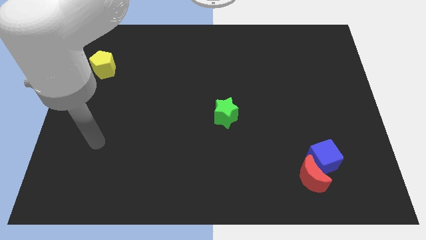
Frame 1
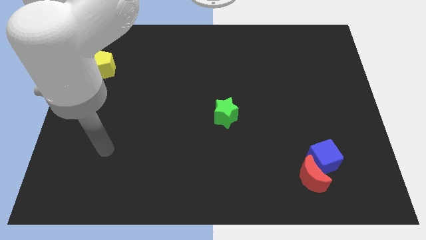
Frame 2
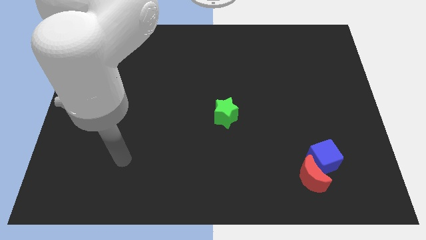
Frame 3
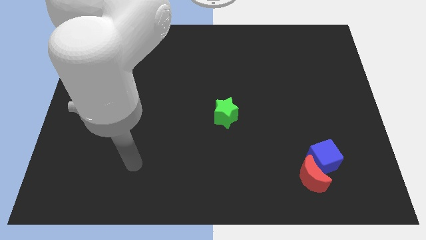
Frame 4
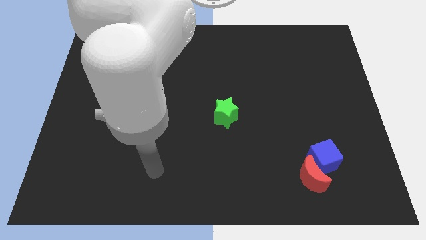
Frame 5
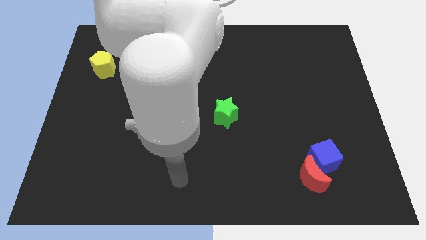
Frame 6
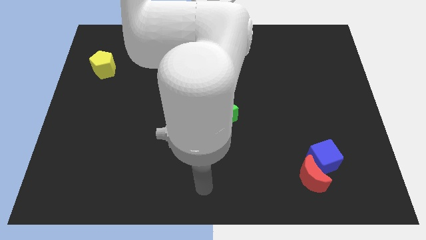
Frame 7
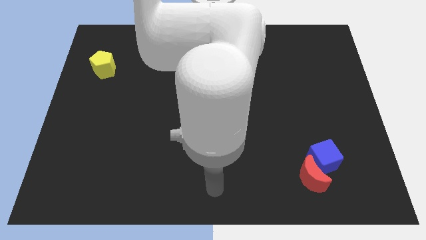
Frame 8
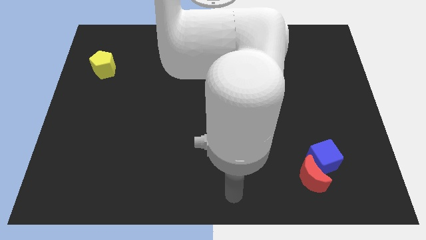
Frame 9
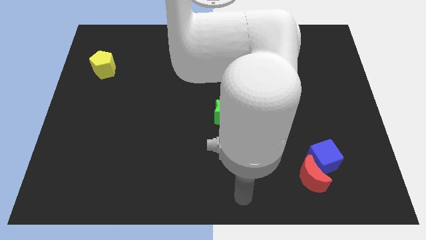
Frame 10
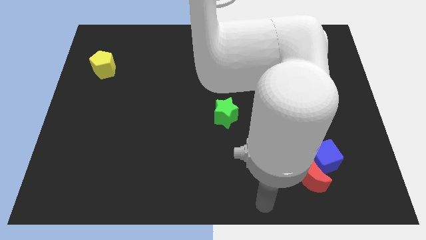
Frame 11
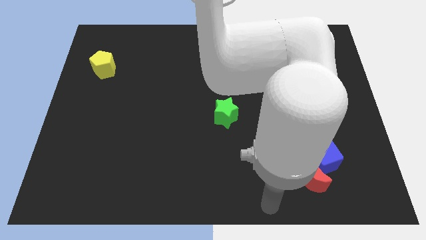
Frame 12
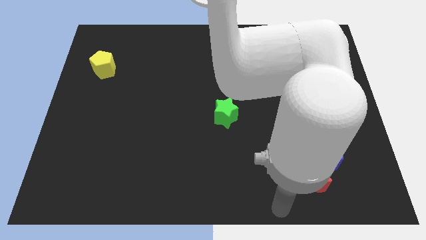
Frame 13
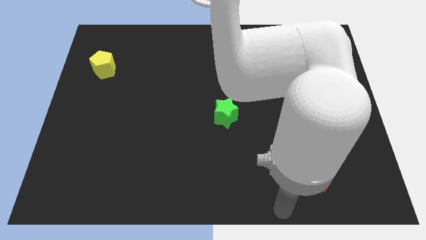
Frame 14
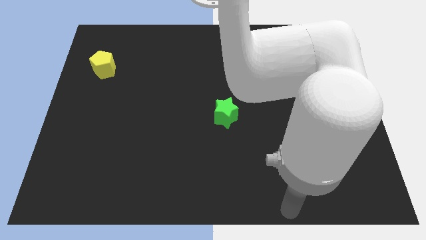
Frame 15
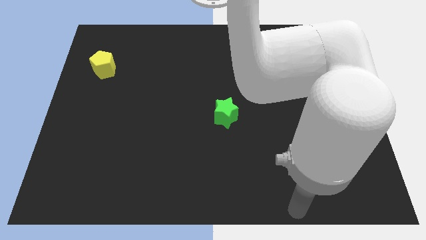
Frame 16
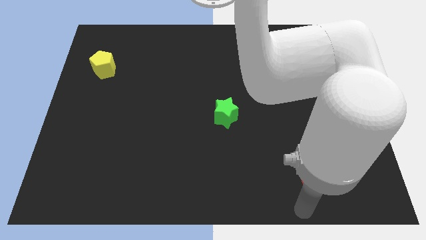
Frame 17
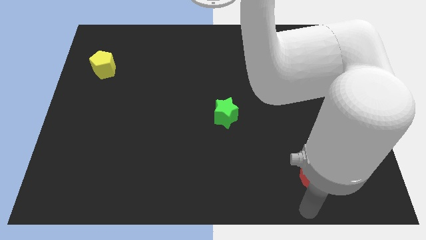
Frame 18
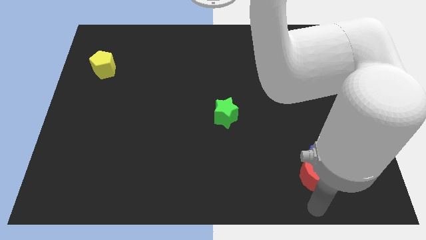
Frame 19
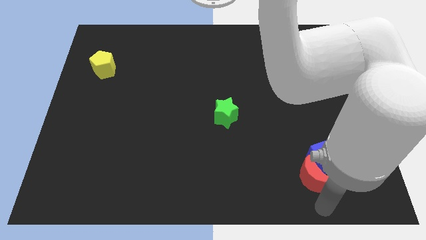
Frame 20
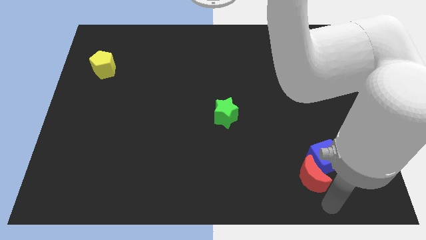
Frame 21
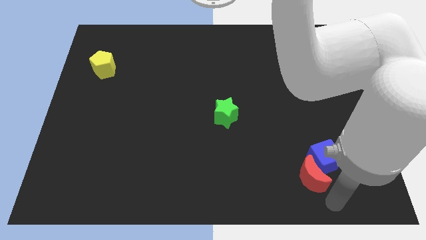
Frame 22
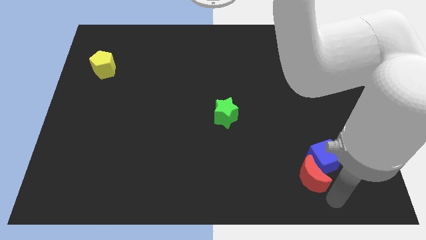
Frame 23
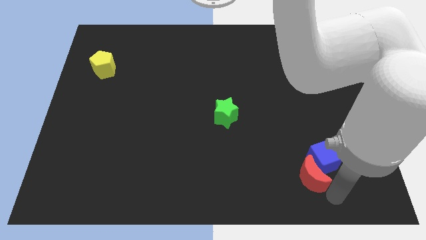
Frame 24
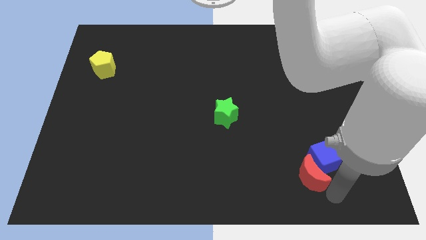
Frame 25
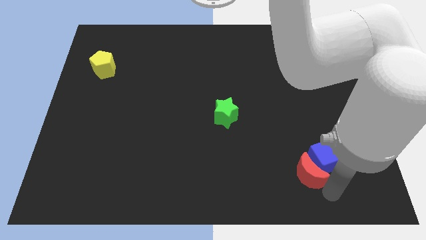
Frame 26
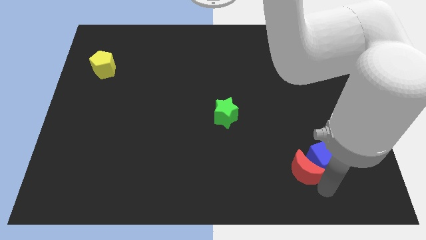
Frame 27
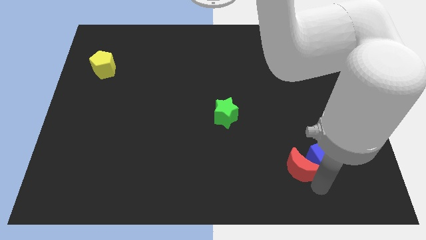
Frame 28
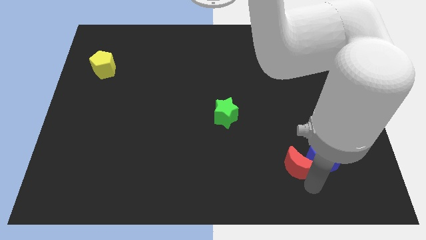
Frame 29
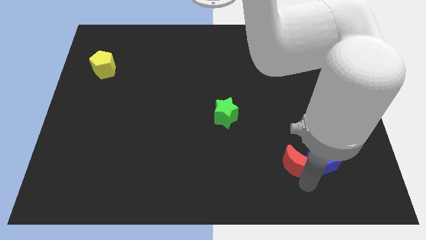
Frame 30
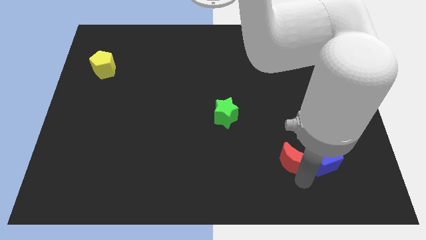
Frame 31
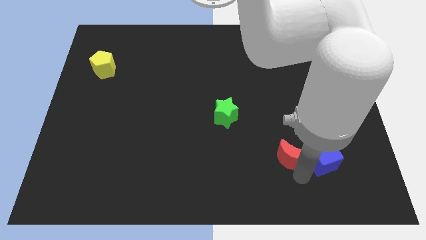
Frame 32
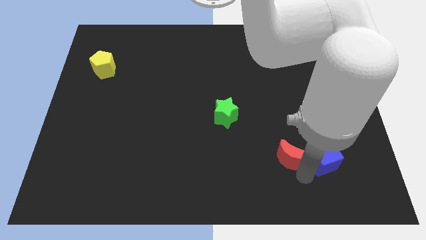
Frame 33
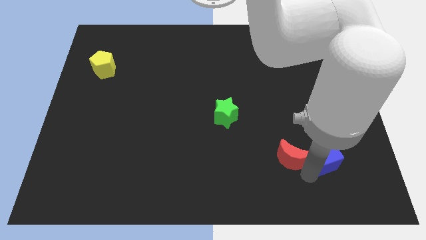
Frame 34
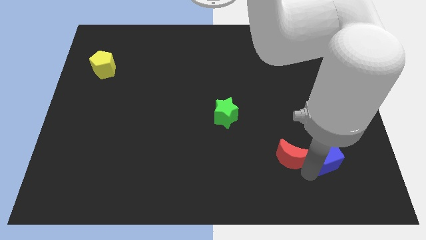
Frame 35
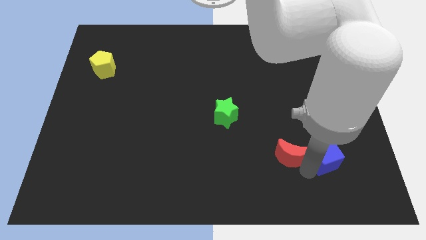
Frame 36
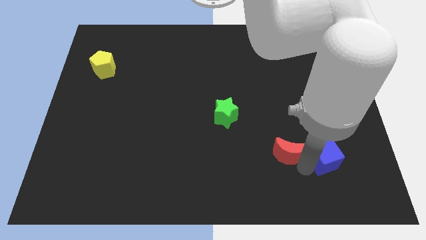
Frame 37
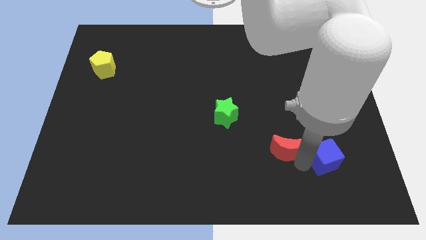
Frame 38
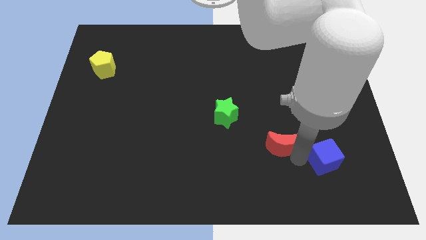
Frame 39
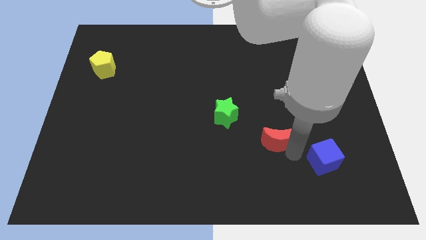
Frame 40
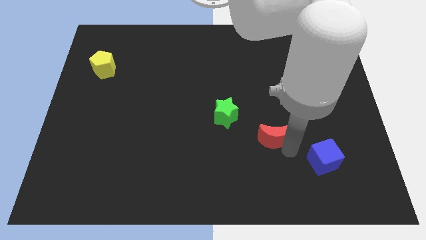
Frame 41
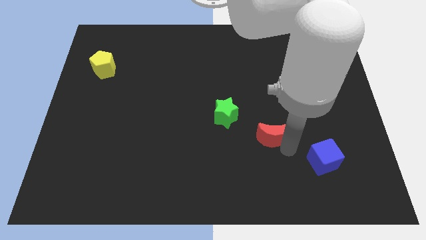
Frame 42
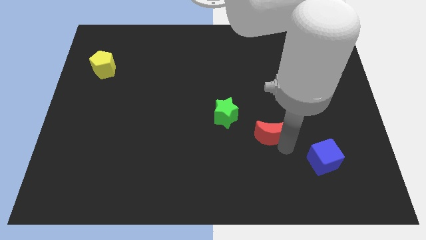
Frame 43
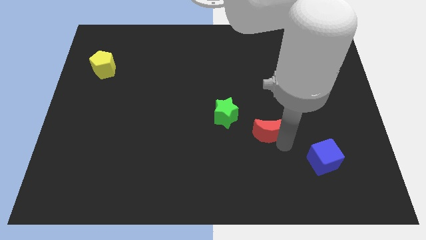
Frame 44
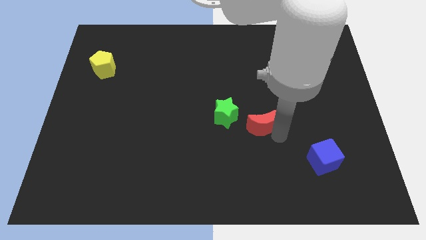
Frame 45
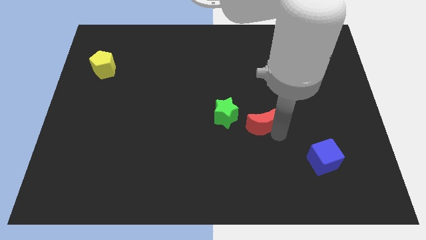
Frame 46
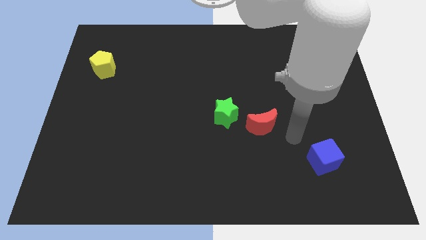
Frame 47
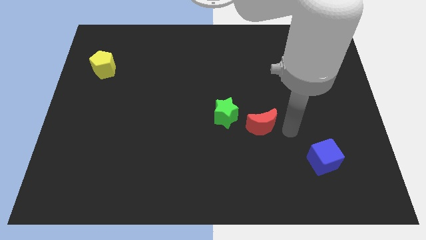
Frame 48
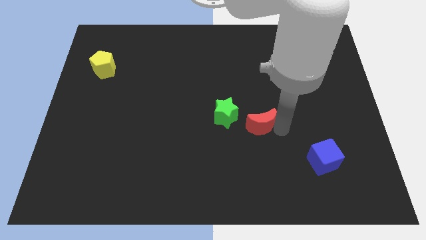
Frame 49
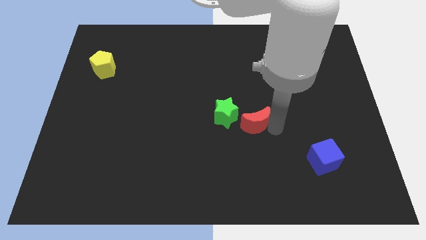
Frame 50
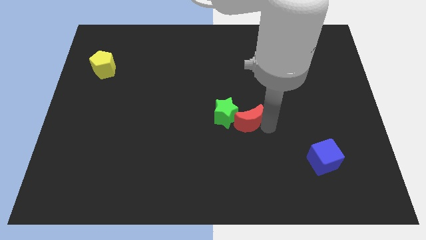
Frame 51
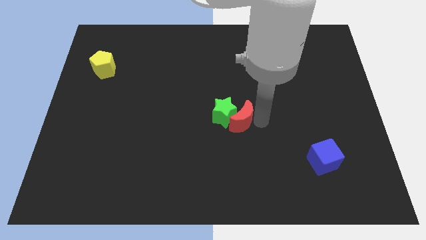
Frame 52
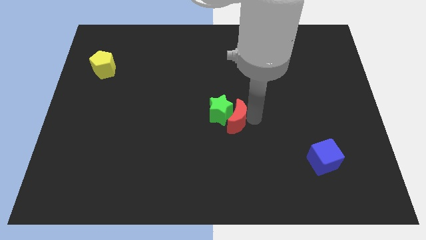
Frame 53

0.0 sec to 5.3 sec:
slide the red block to the star

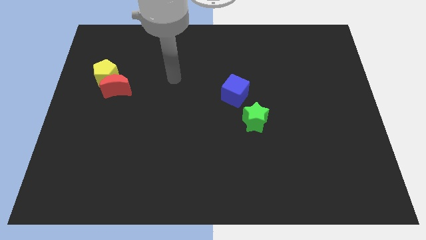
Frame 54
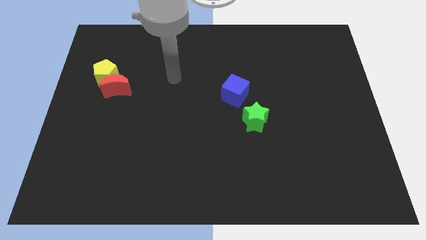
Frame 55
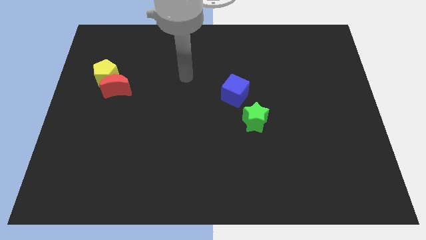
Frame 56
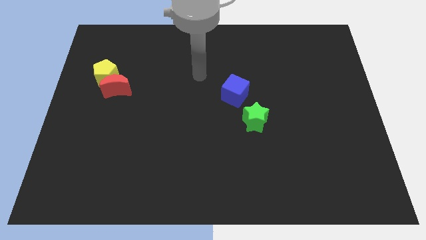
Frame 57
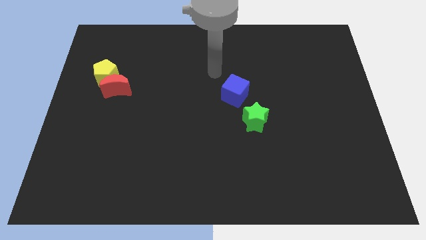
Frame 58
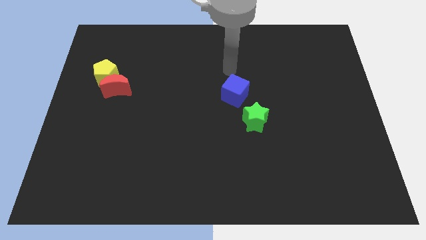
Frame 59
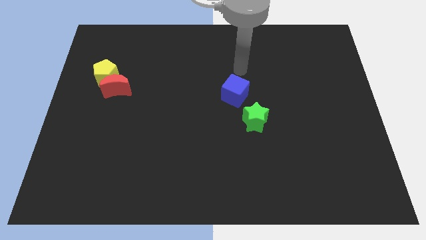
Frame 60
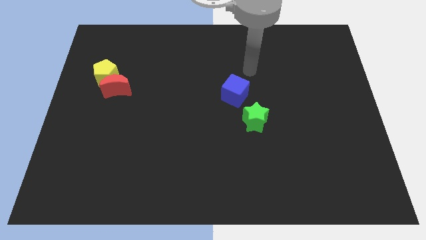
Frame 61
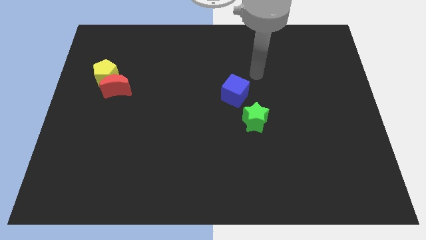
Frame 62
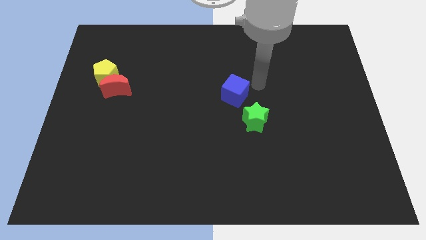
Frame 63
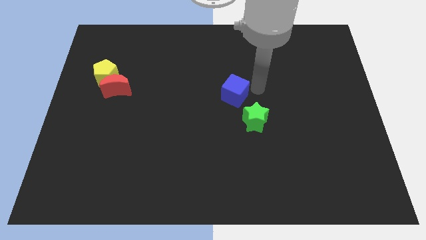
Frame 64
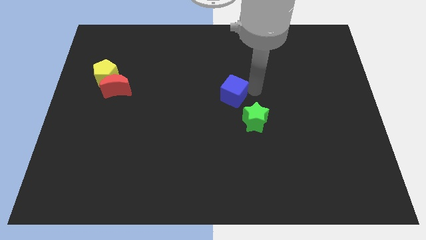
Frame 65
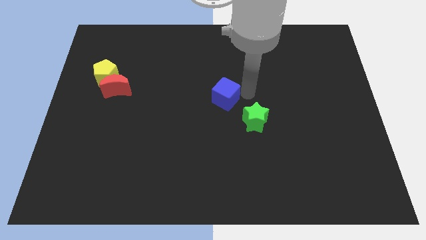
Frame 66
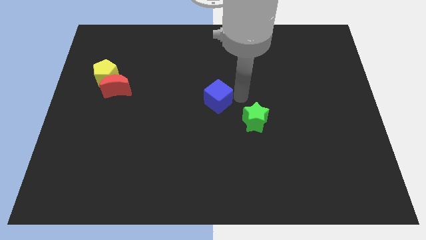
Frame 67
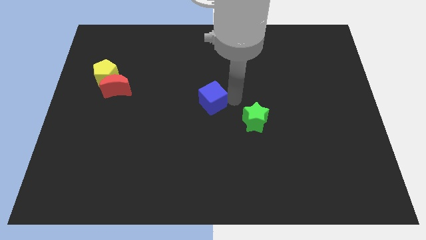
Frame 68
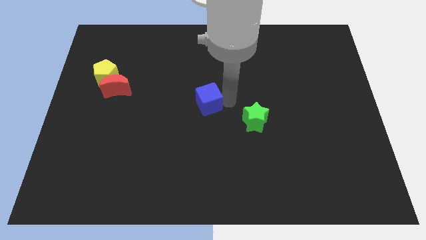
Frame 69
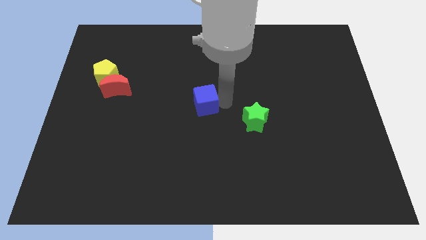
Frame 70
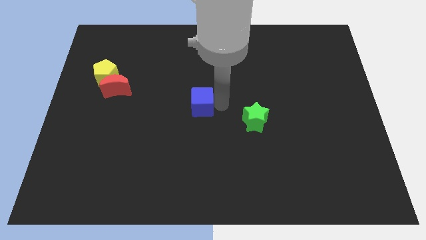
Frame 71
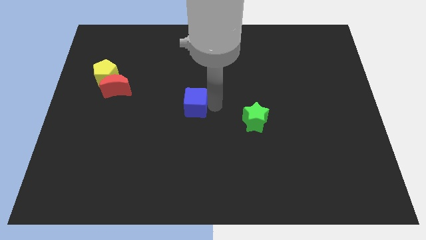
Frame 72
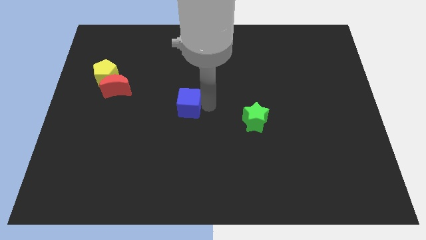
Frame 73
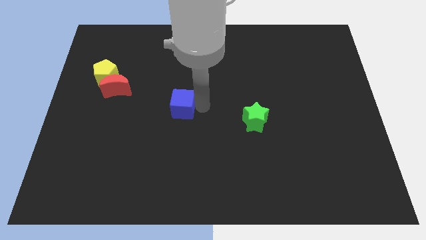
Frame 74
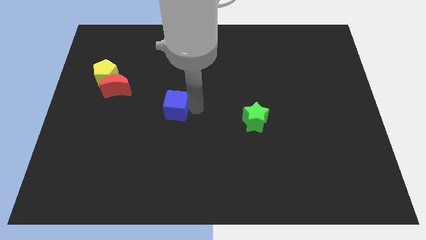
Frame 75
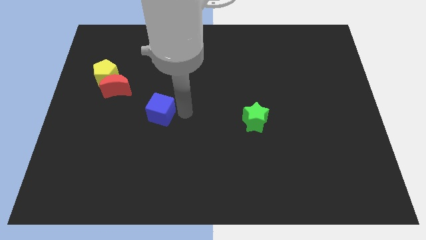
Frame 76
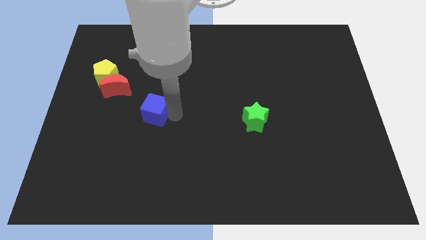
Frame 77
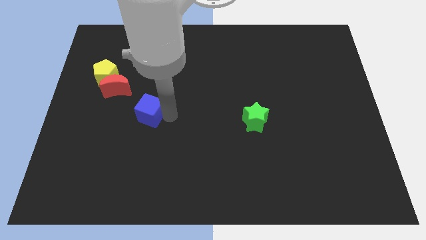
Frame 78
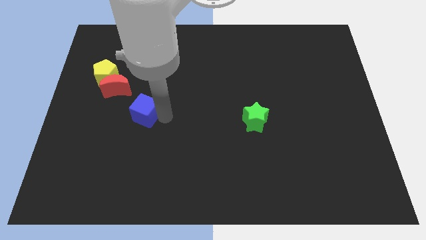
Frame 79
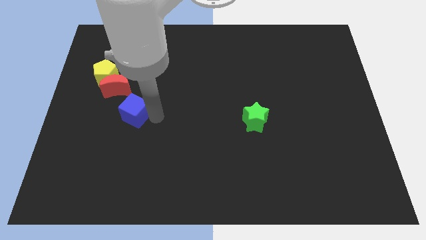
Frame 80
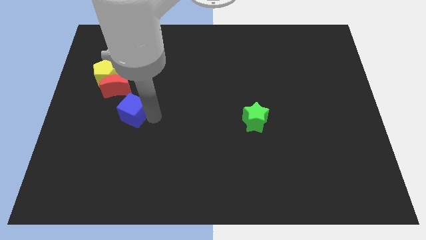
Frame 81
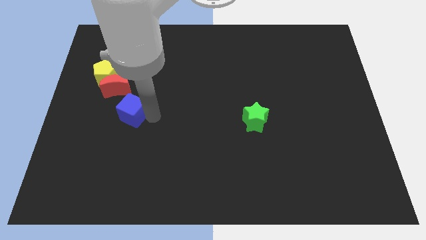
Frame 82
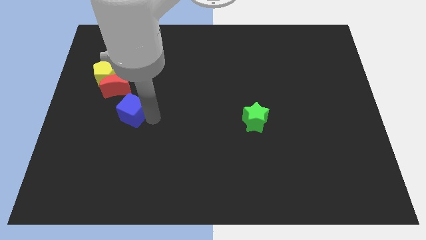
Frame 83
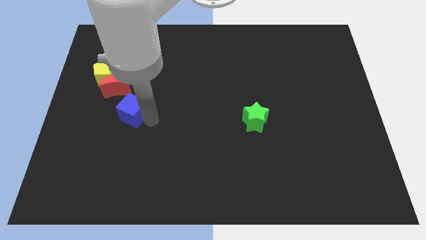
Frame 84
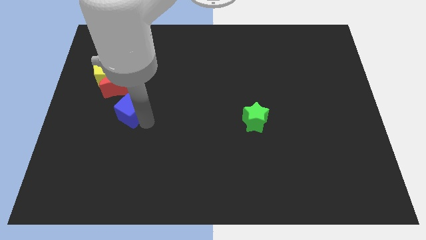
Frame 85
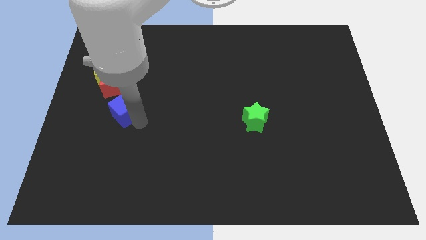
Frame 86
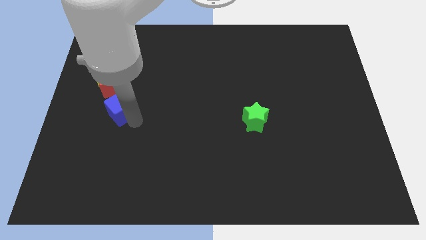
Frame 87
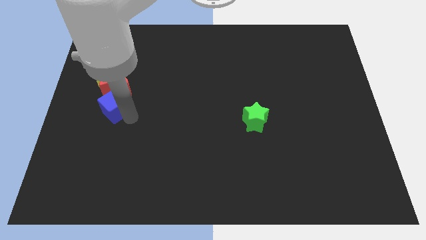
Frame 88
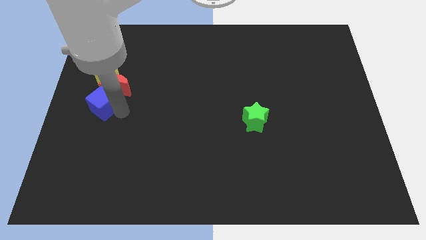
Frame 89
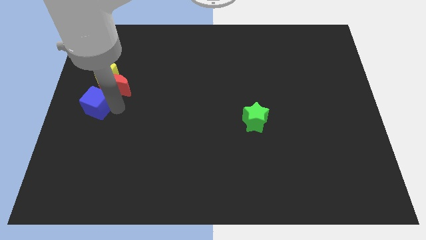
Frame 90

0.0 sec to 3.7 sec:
push the cube next to the red block
